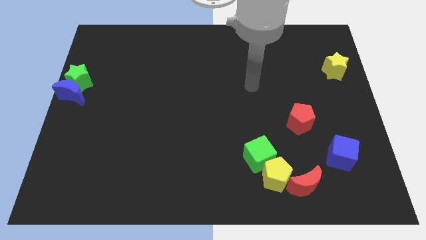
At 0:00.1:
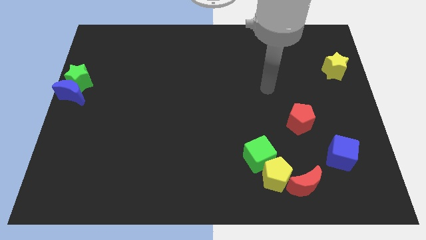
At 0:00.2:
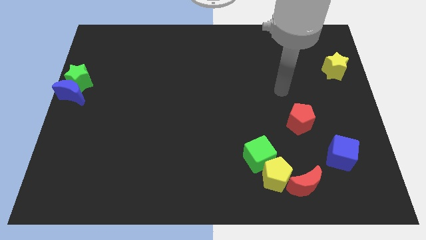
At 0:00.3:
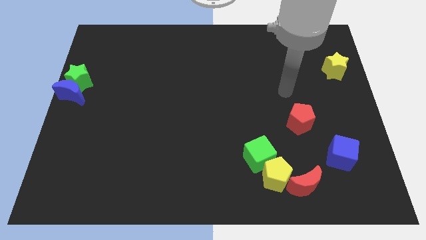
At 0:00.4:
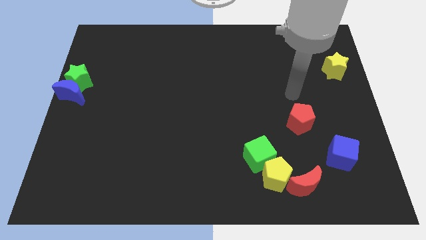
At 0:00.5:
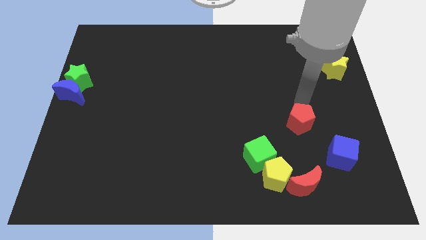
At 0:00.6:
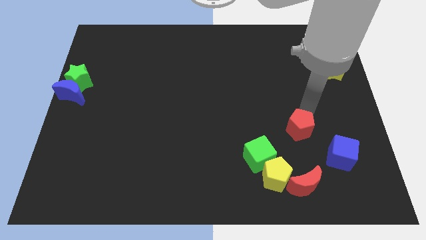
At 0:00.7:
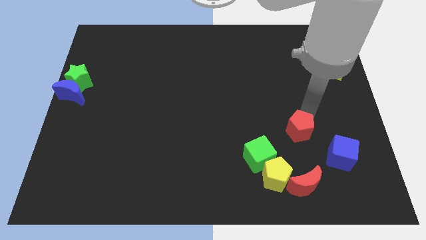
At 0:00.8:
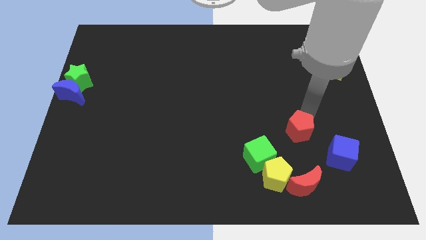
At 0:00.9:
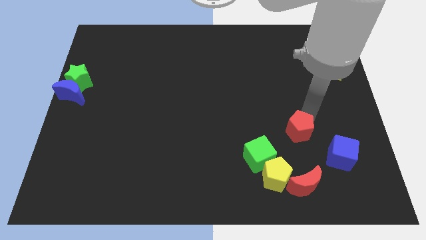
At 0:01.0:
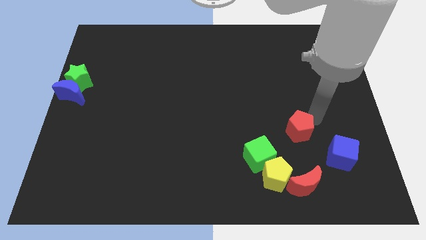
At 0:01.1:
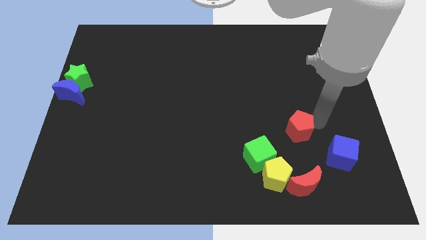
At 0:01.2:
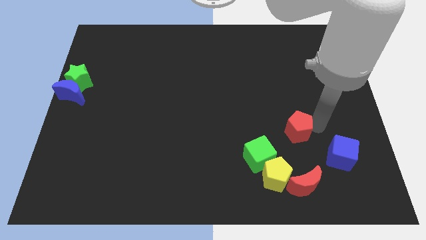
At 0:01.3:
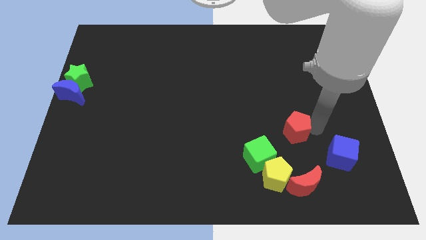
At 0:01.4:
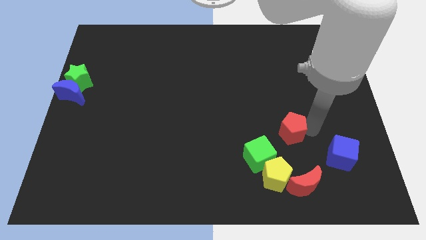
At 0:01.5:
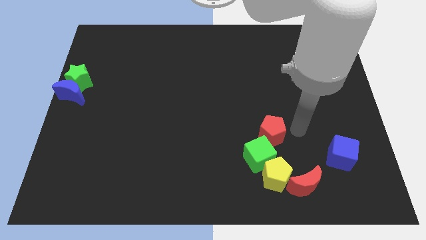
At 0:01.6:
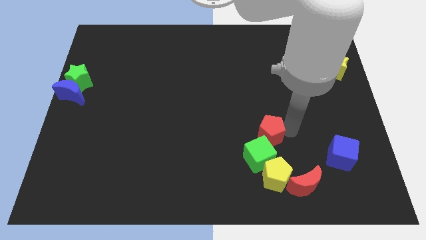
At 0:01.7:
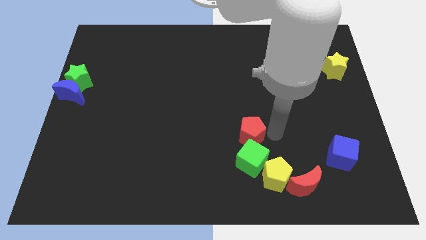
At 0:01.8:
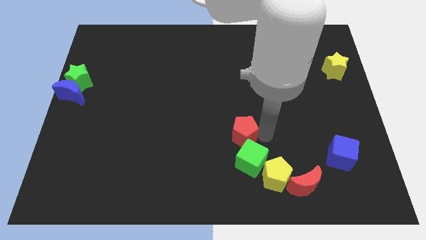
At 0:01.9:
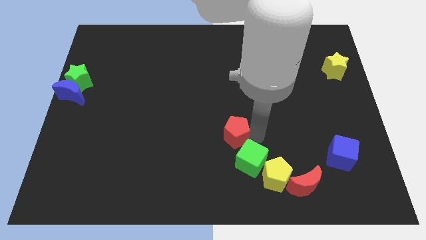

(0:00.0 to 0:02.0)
place the red pentagon to the top of green cube

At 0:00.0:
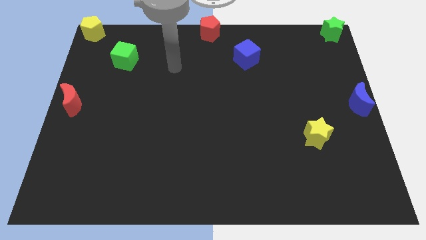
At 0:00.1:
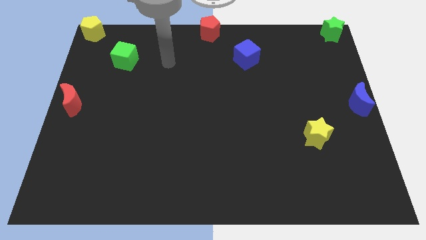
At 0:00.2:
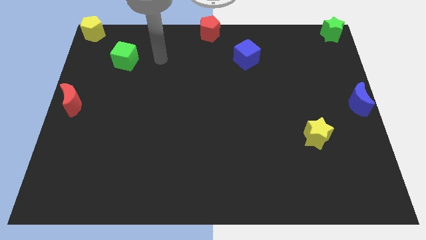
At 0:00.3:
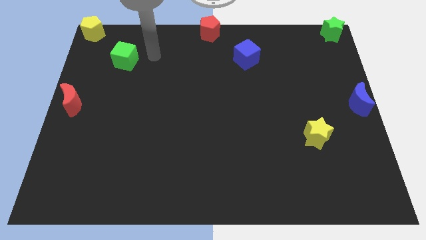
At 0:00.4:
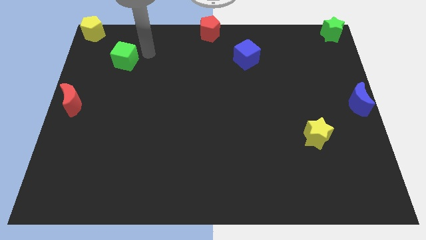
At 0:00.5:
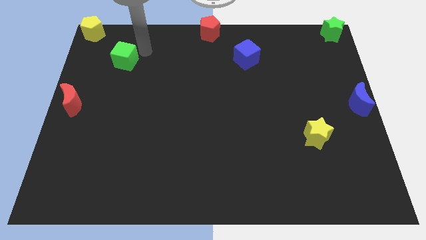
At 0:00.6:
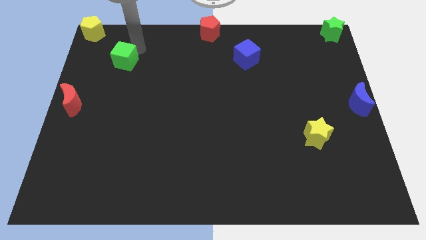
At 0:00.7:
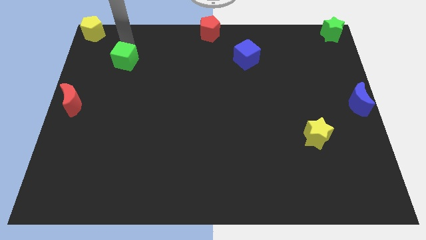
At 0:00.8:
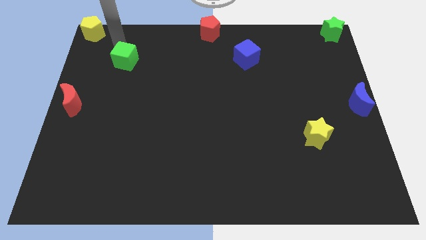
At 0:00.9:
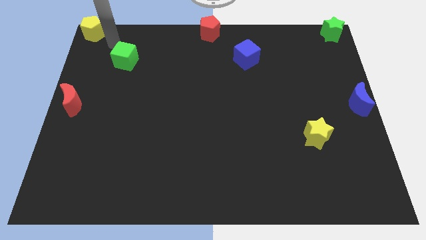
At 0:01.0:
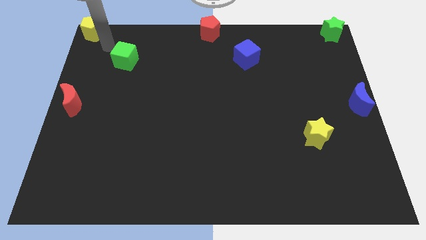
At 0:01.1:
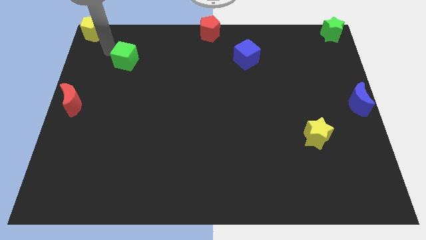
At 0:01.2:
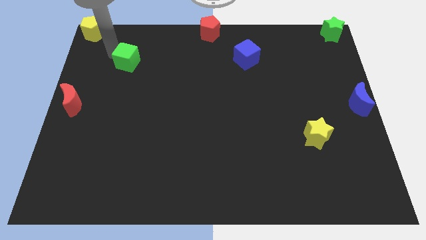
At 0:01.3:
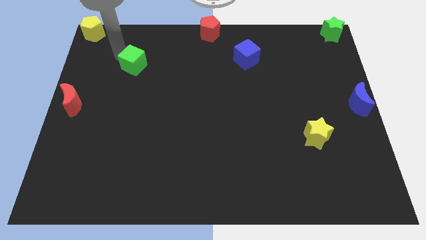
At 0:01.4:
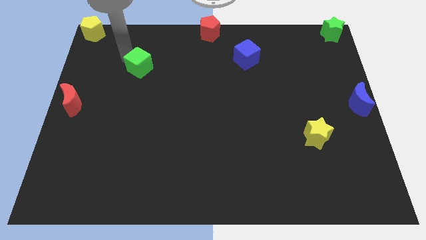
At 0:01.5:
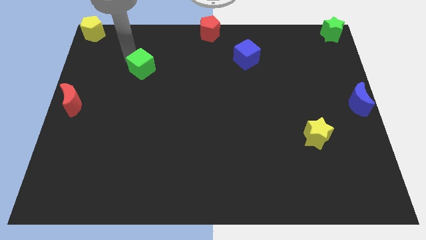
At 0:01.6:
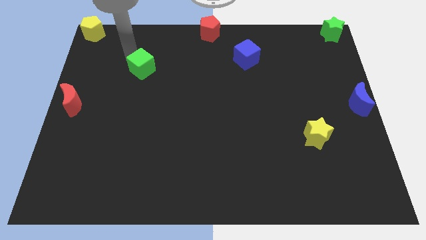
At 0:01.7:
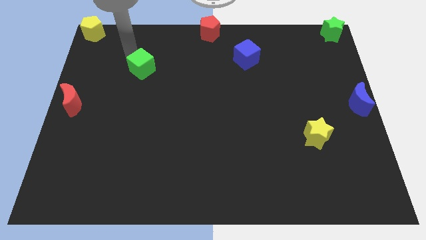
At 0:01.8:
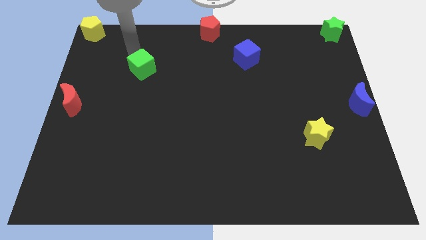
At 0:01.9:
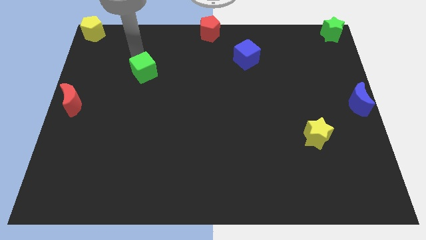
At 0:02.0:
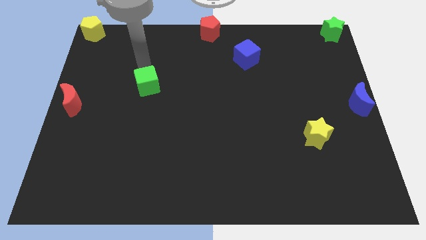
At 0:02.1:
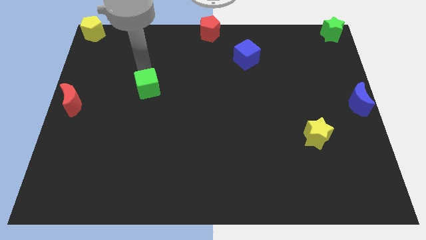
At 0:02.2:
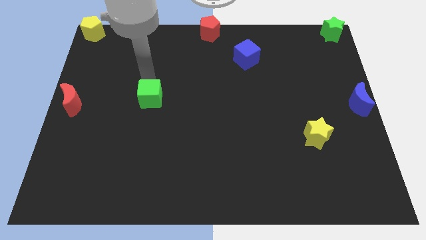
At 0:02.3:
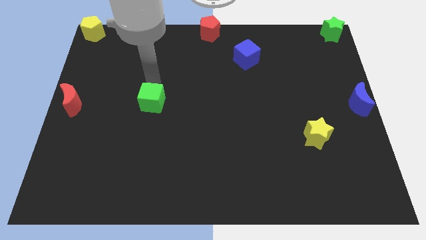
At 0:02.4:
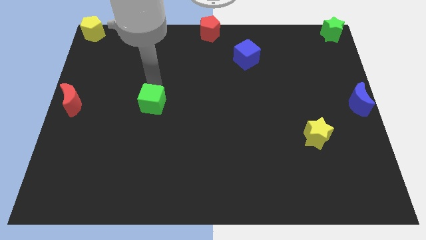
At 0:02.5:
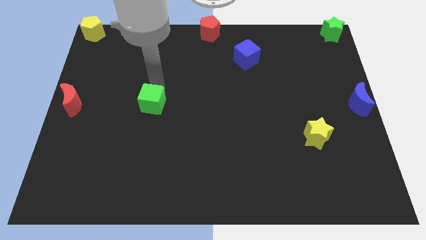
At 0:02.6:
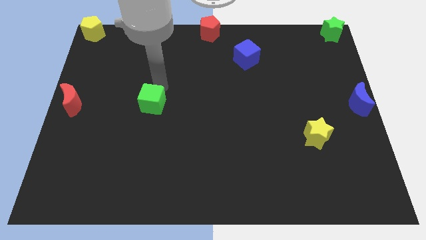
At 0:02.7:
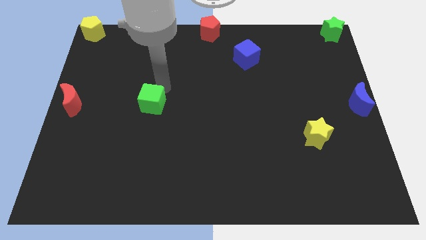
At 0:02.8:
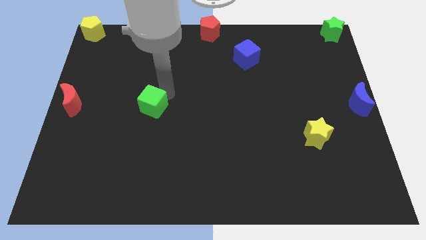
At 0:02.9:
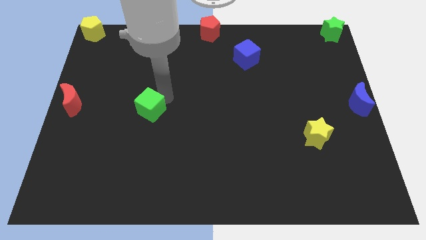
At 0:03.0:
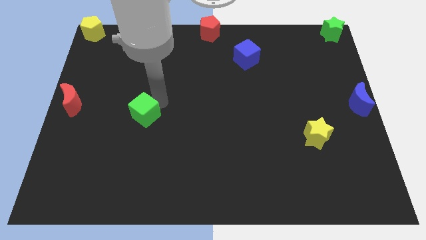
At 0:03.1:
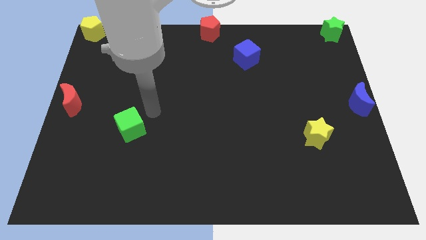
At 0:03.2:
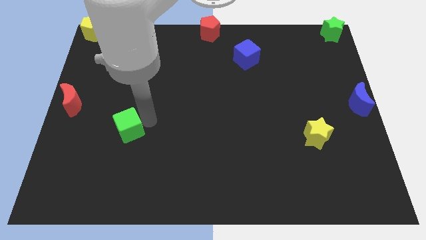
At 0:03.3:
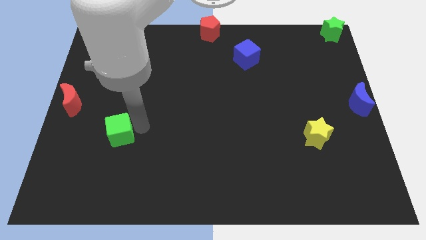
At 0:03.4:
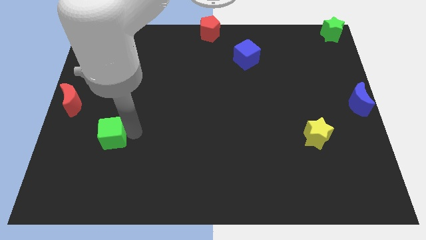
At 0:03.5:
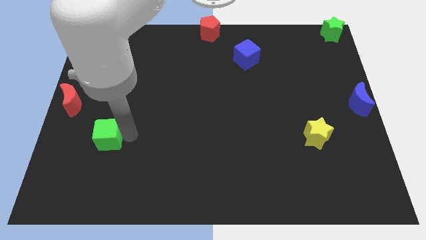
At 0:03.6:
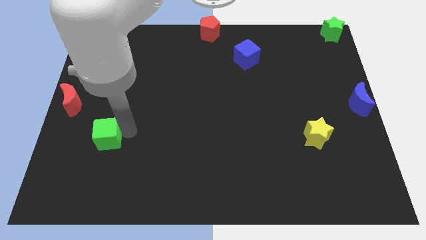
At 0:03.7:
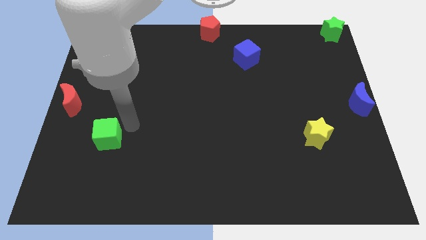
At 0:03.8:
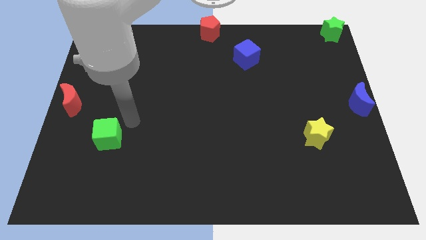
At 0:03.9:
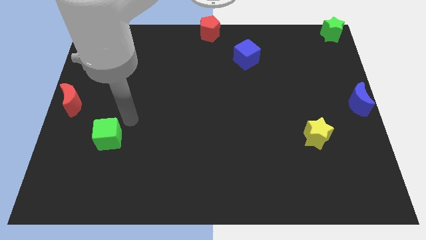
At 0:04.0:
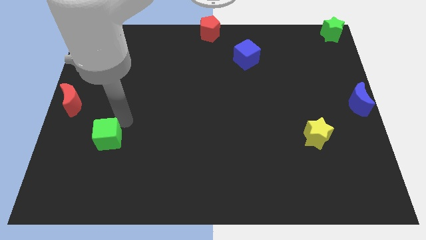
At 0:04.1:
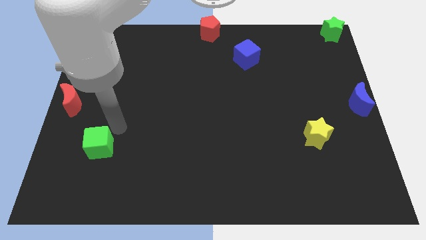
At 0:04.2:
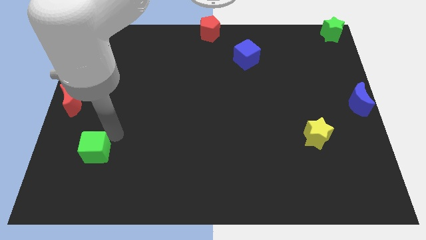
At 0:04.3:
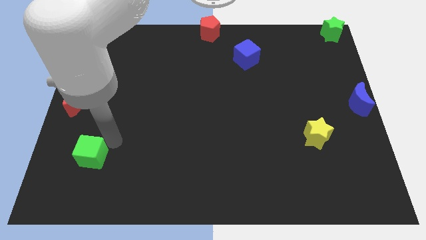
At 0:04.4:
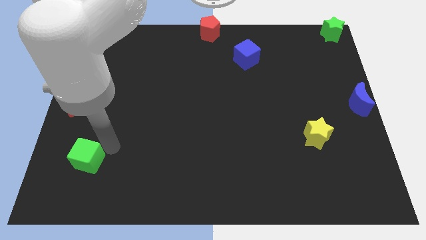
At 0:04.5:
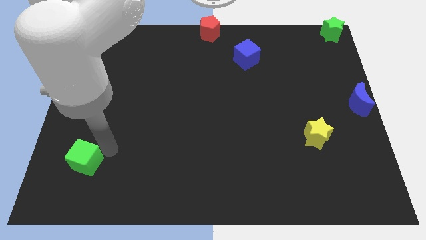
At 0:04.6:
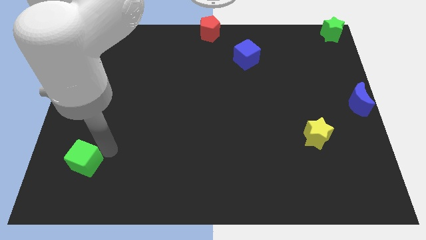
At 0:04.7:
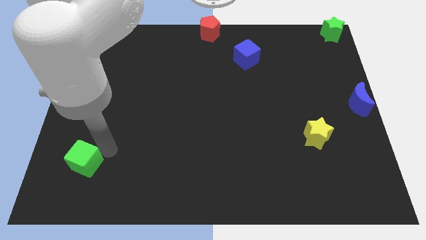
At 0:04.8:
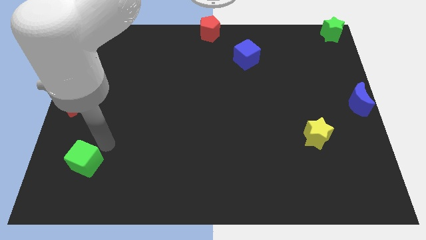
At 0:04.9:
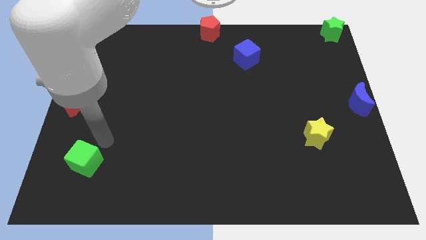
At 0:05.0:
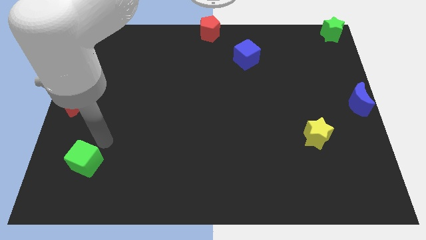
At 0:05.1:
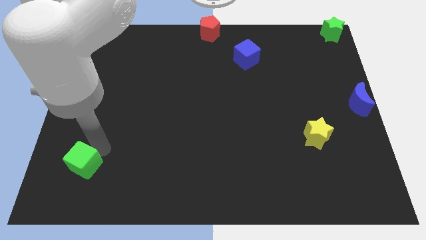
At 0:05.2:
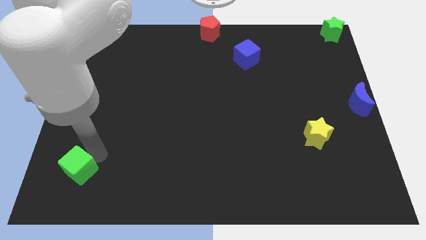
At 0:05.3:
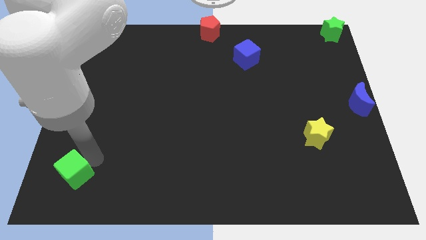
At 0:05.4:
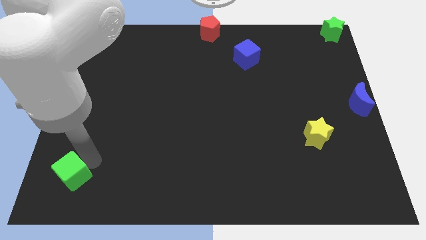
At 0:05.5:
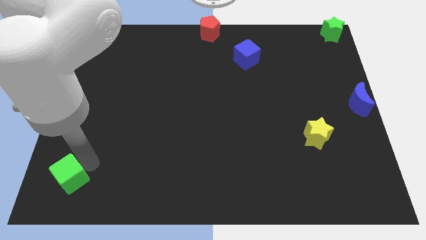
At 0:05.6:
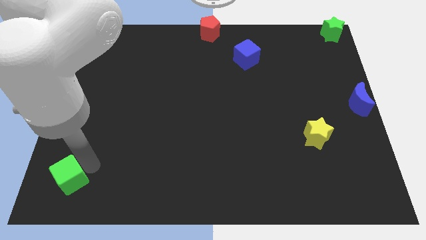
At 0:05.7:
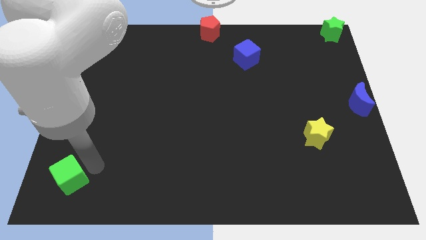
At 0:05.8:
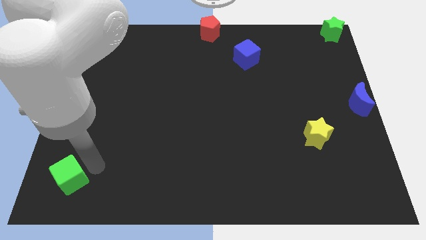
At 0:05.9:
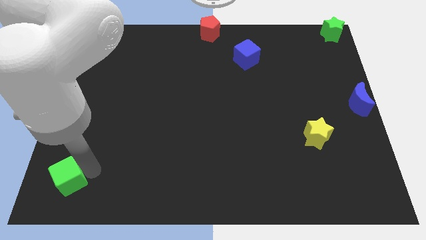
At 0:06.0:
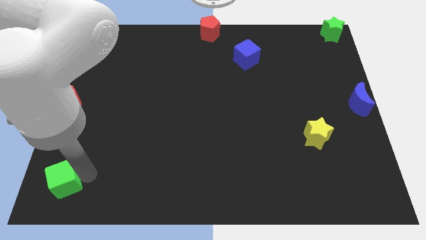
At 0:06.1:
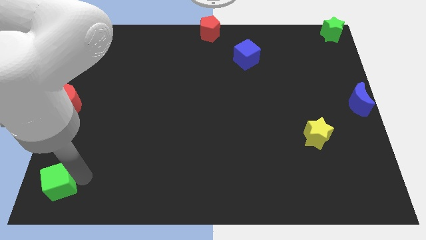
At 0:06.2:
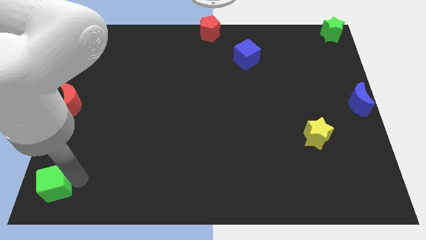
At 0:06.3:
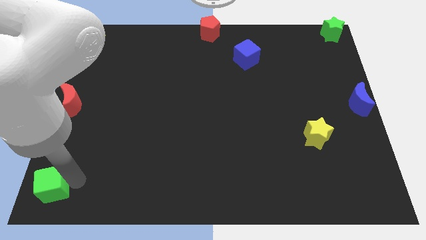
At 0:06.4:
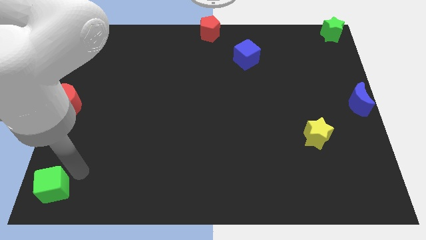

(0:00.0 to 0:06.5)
move the green cube underneath the red moon

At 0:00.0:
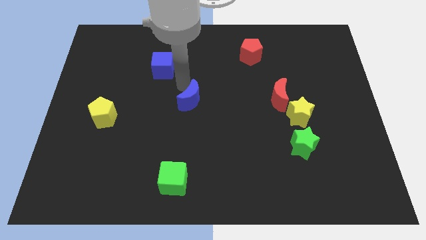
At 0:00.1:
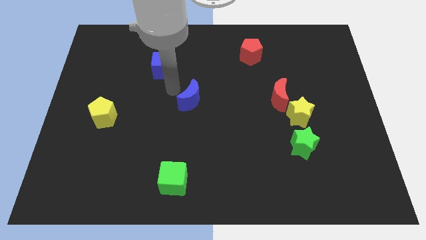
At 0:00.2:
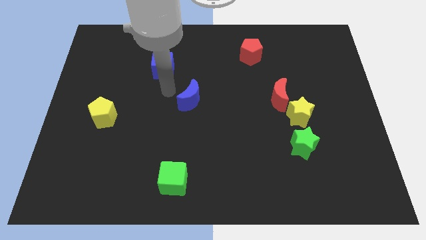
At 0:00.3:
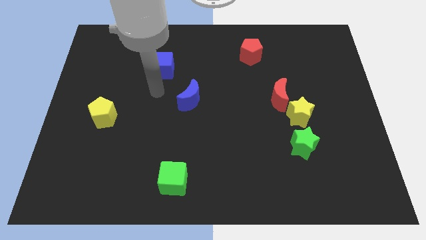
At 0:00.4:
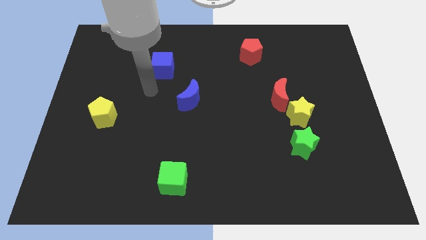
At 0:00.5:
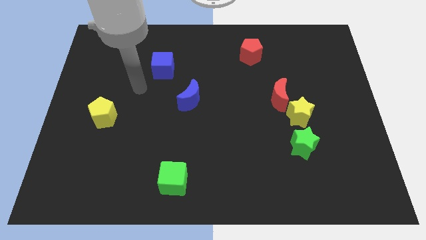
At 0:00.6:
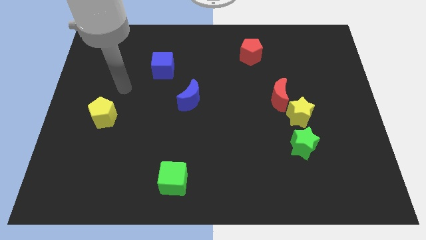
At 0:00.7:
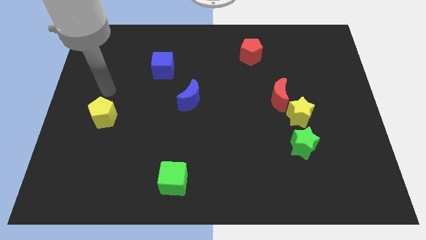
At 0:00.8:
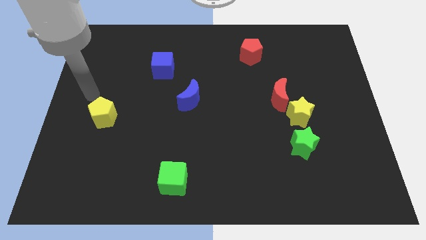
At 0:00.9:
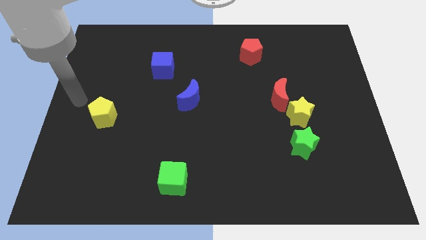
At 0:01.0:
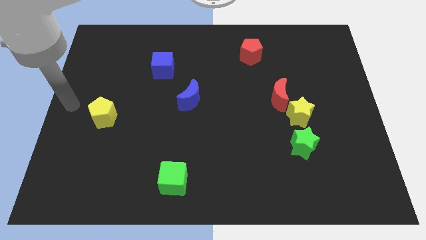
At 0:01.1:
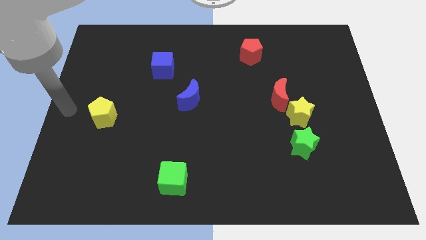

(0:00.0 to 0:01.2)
put your arm left towards the yellow pentagon
